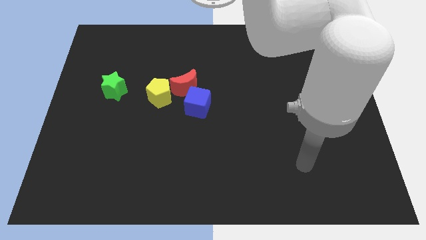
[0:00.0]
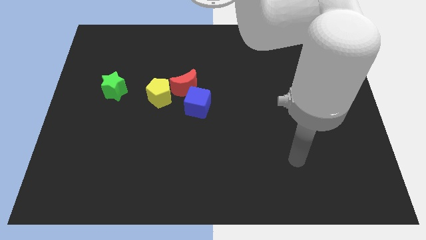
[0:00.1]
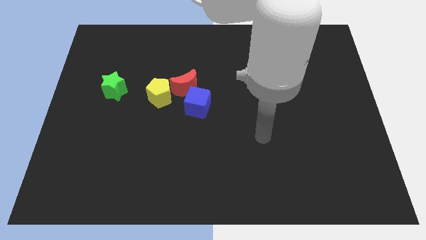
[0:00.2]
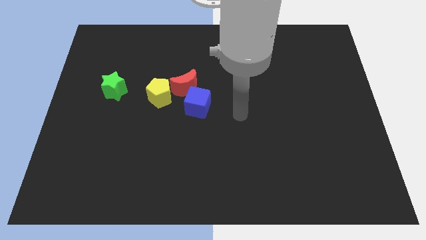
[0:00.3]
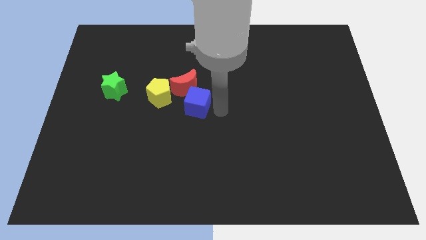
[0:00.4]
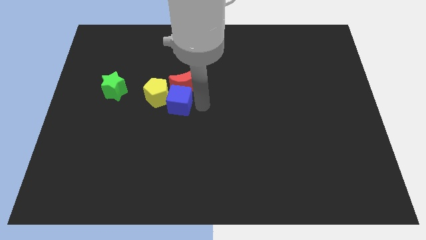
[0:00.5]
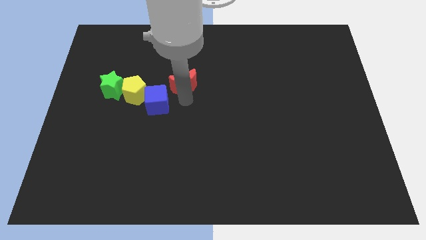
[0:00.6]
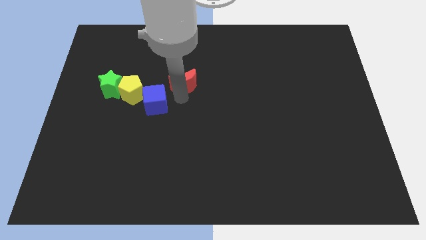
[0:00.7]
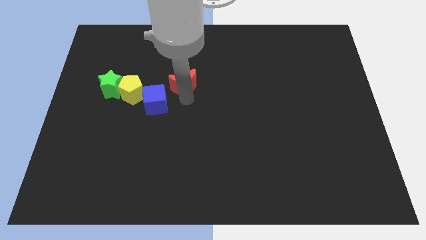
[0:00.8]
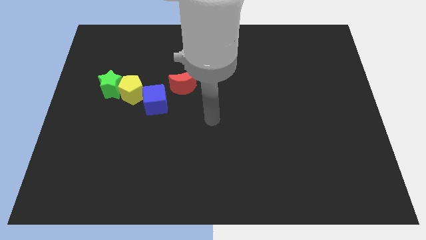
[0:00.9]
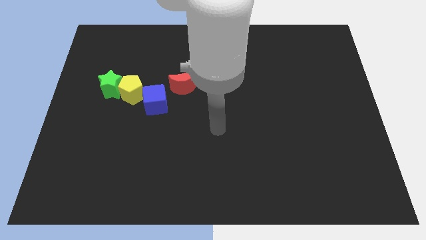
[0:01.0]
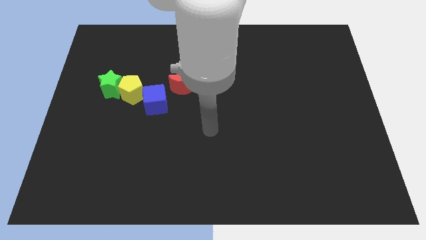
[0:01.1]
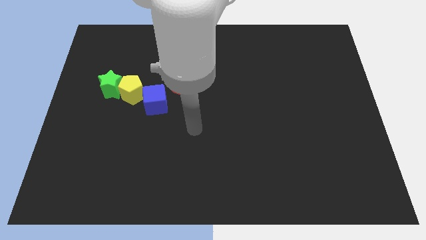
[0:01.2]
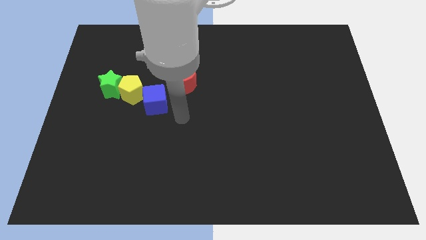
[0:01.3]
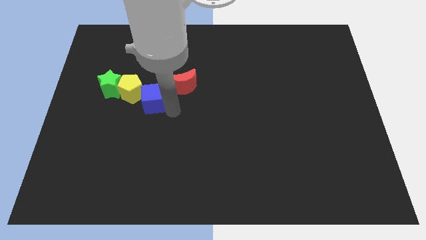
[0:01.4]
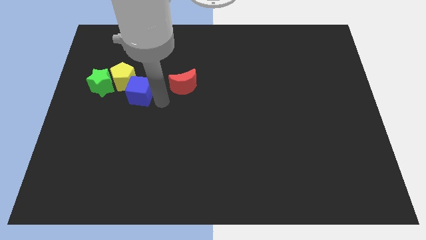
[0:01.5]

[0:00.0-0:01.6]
push the blue cube next to the pentagon

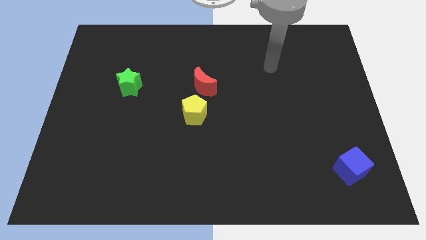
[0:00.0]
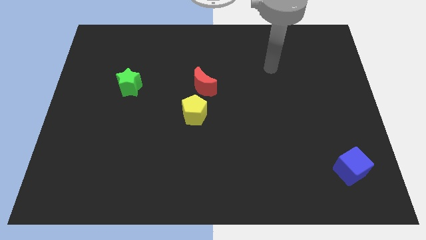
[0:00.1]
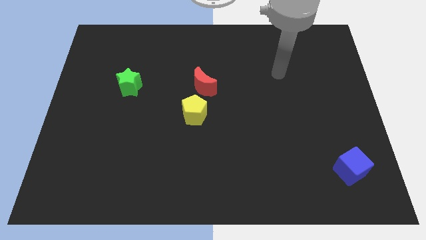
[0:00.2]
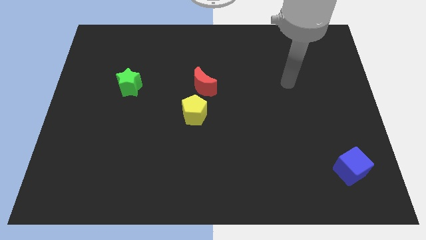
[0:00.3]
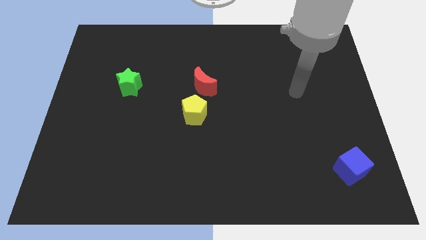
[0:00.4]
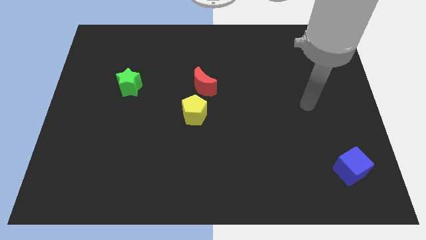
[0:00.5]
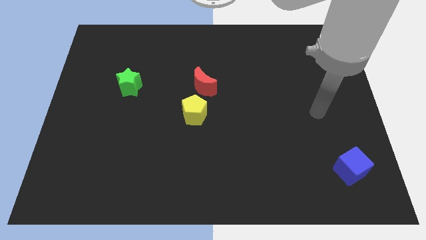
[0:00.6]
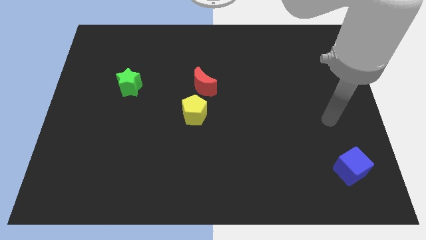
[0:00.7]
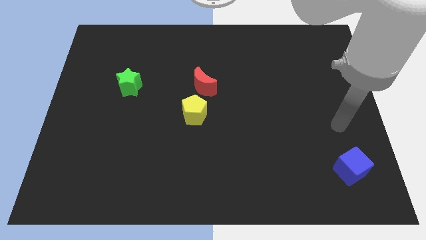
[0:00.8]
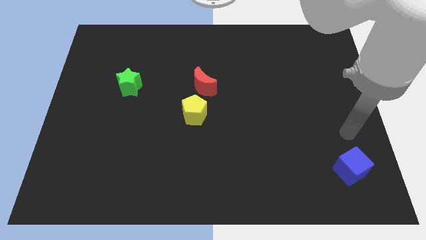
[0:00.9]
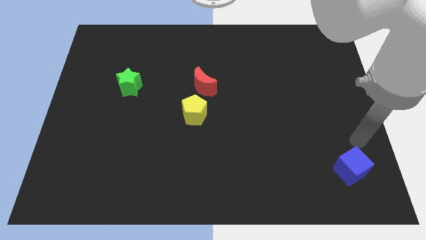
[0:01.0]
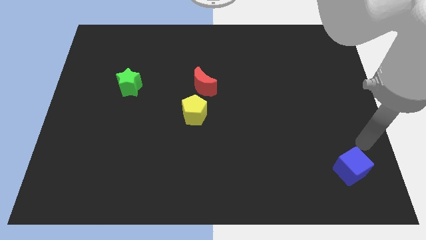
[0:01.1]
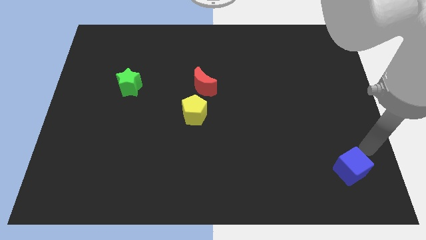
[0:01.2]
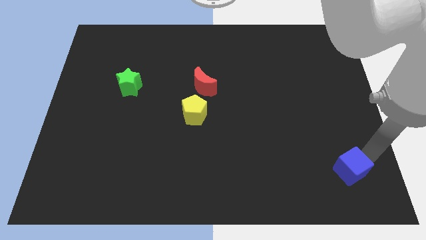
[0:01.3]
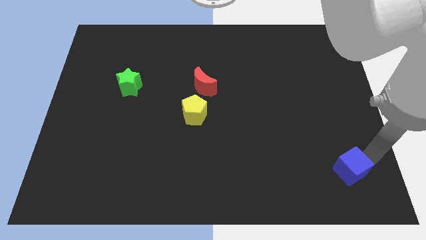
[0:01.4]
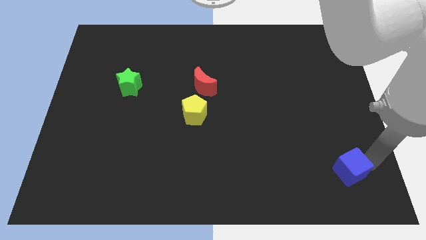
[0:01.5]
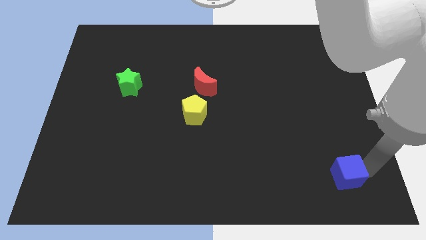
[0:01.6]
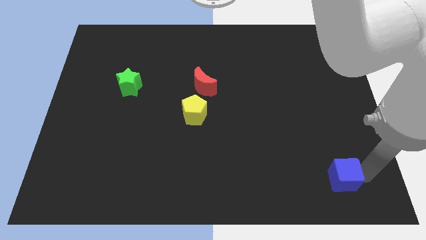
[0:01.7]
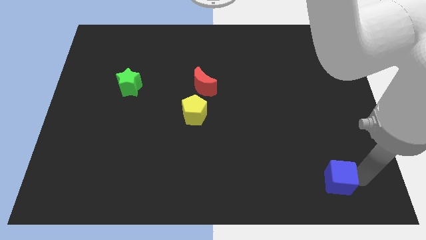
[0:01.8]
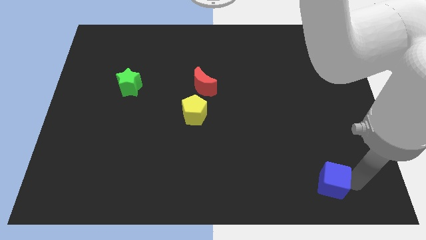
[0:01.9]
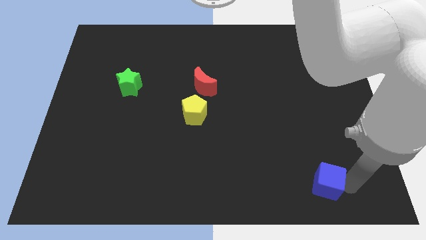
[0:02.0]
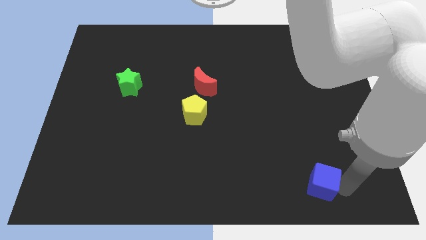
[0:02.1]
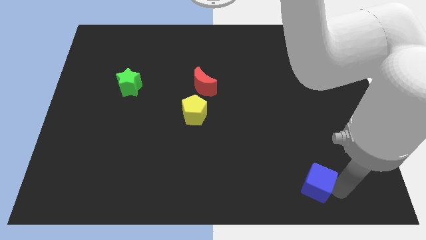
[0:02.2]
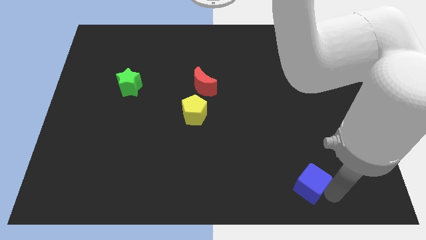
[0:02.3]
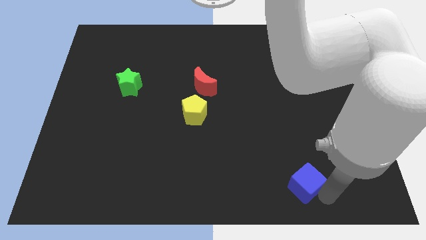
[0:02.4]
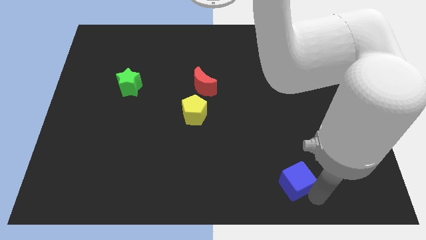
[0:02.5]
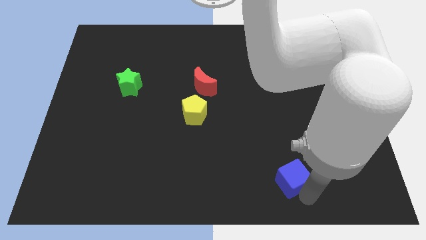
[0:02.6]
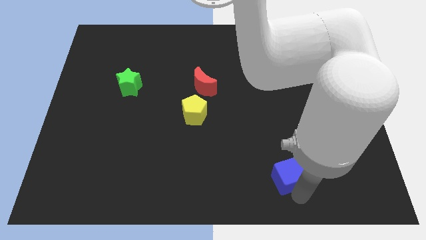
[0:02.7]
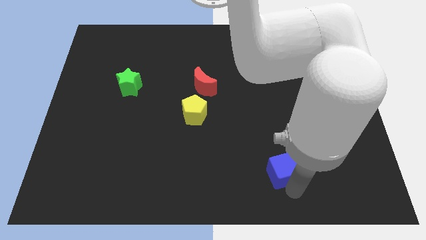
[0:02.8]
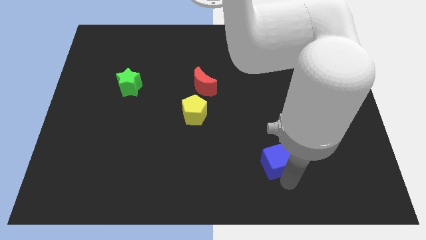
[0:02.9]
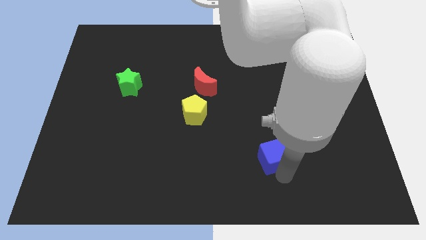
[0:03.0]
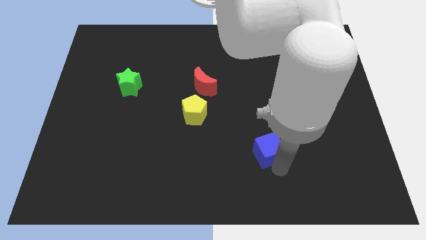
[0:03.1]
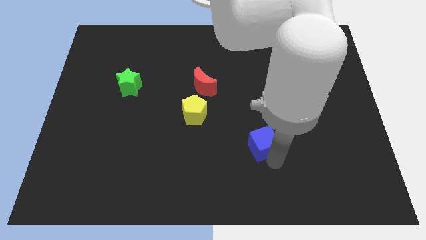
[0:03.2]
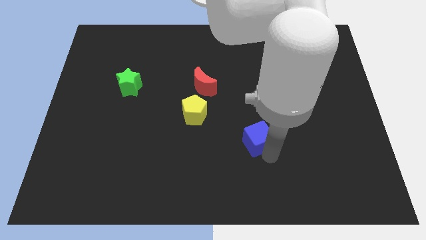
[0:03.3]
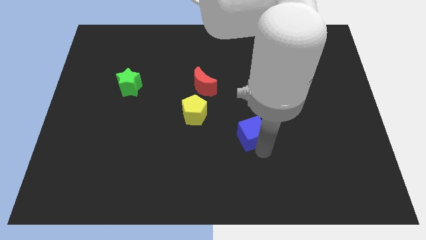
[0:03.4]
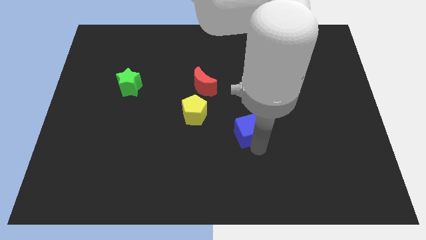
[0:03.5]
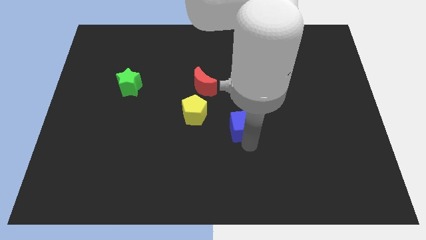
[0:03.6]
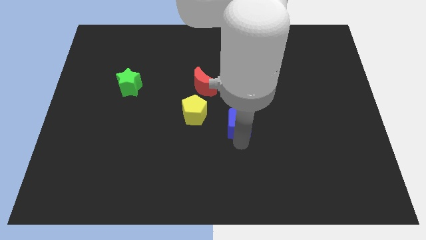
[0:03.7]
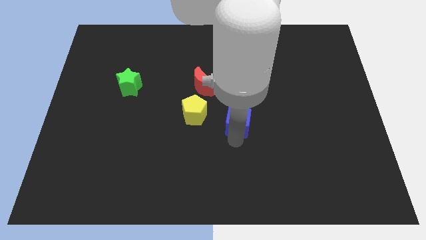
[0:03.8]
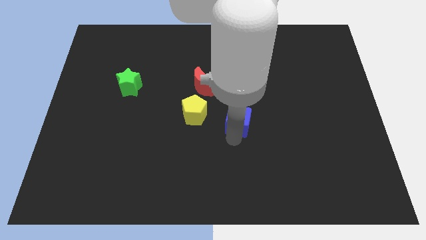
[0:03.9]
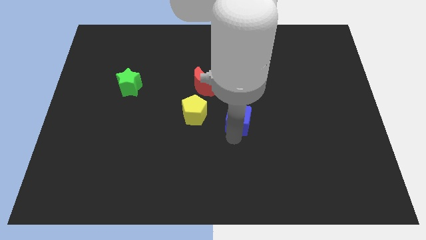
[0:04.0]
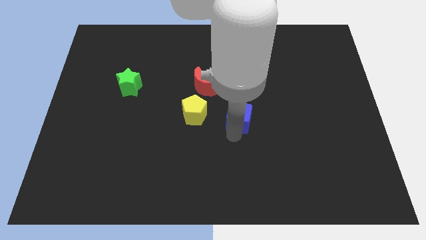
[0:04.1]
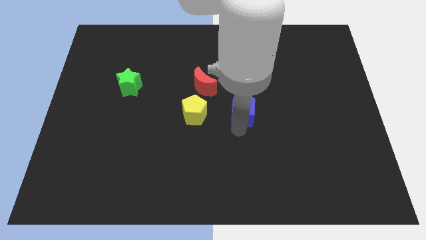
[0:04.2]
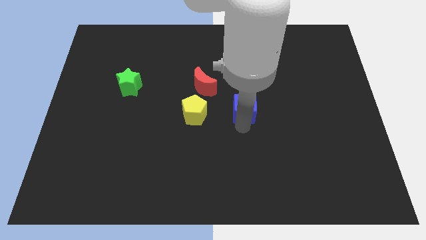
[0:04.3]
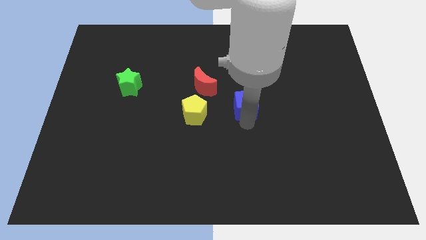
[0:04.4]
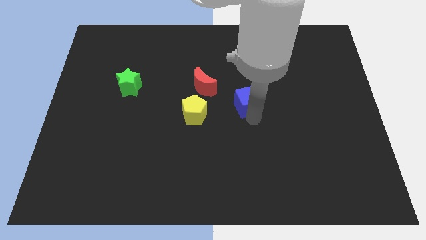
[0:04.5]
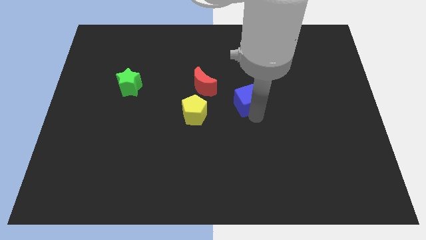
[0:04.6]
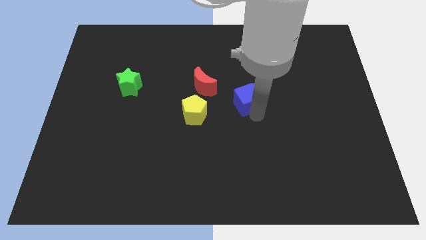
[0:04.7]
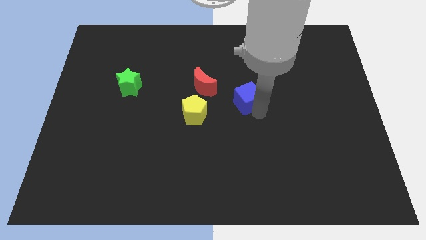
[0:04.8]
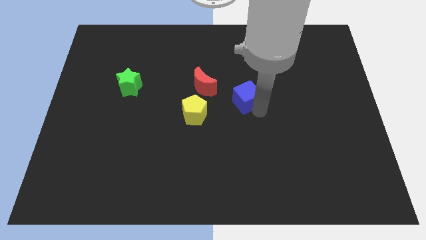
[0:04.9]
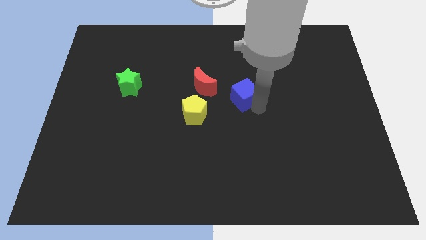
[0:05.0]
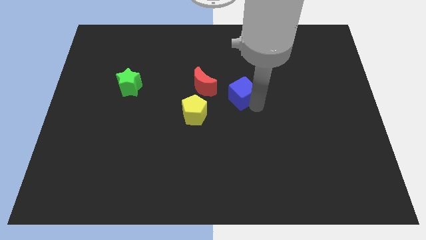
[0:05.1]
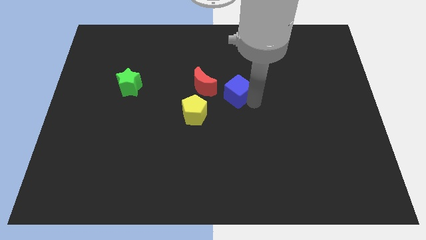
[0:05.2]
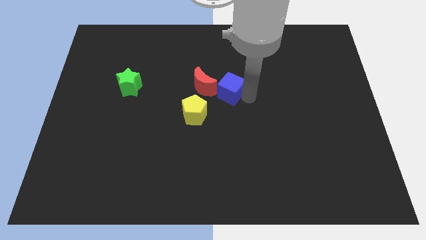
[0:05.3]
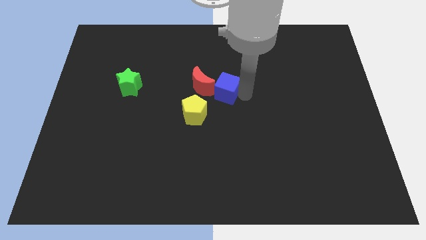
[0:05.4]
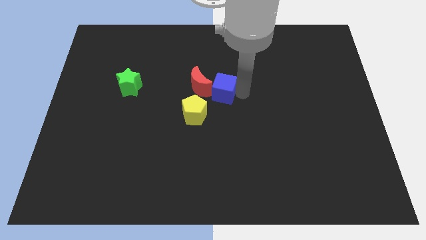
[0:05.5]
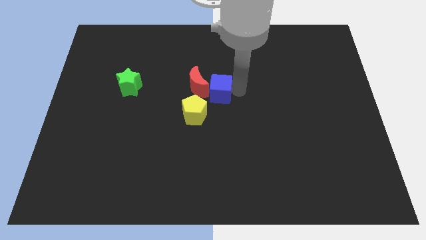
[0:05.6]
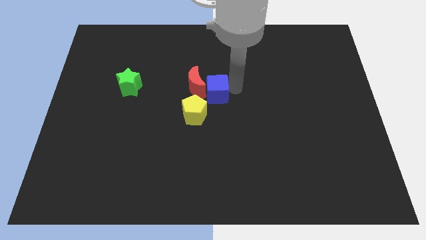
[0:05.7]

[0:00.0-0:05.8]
put the blue cube close to the red moon

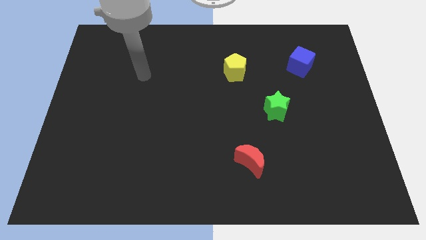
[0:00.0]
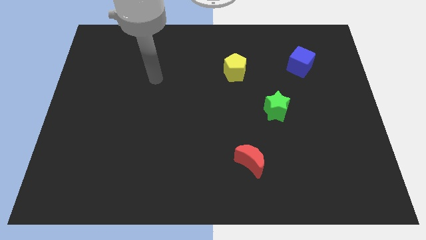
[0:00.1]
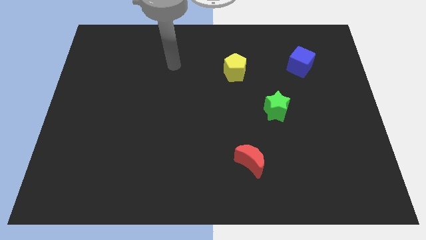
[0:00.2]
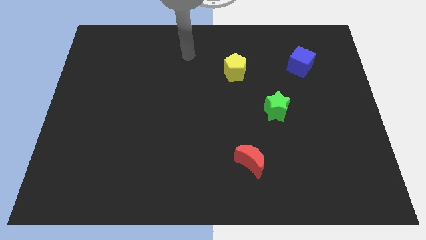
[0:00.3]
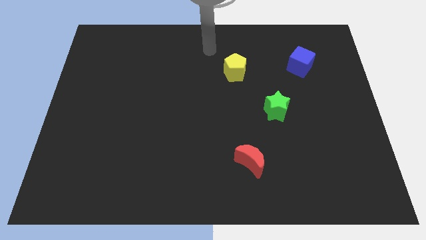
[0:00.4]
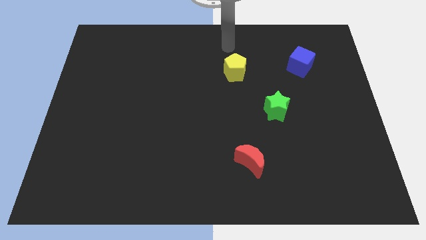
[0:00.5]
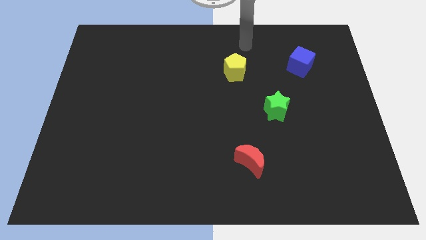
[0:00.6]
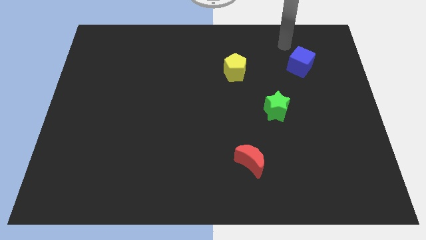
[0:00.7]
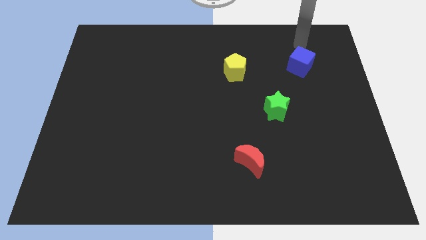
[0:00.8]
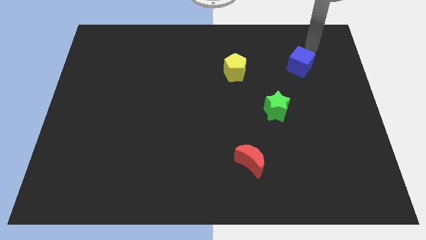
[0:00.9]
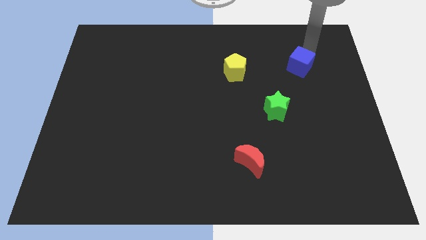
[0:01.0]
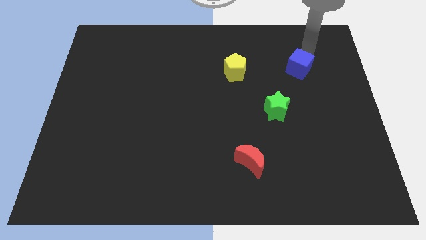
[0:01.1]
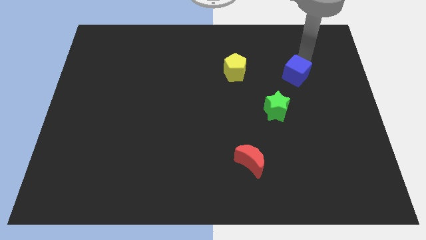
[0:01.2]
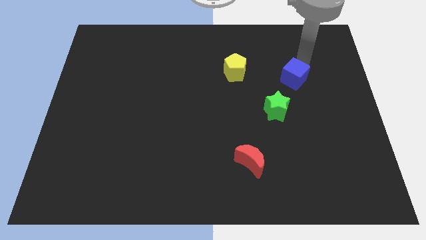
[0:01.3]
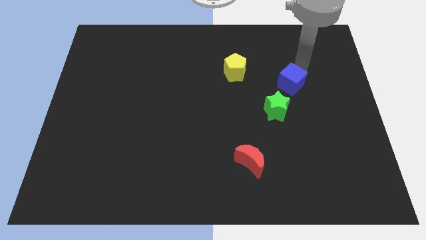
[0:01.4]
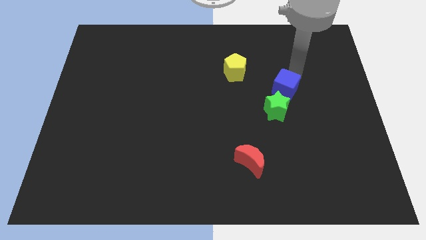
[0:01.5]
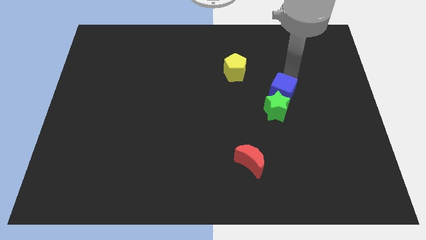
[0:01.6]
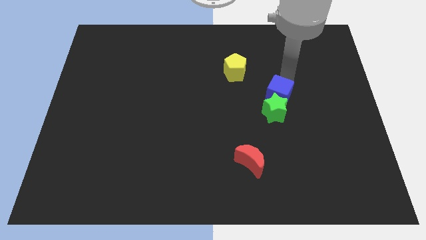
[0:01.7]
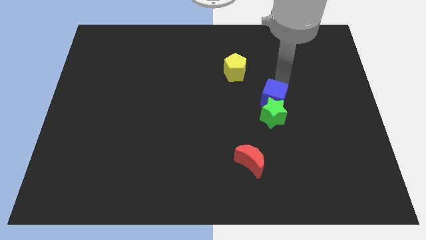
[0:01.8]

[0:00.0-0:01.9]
push the cube towards the green block
